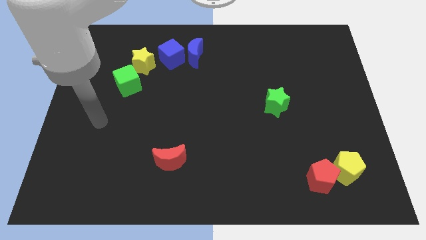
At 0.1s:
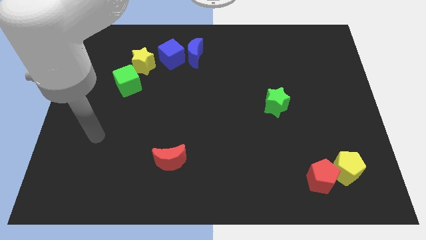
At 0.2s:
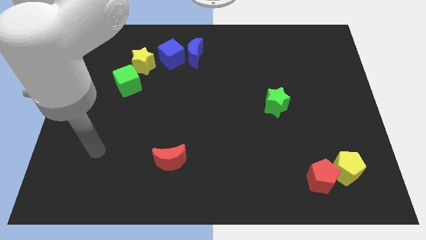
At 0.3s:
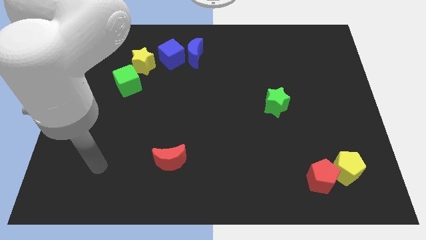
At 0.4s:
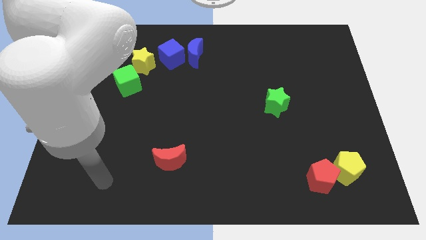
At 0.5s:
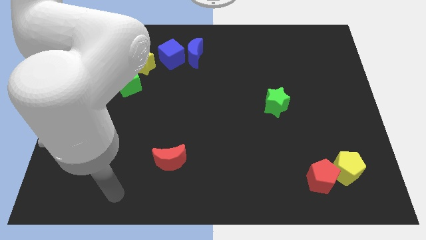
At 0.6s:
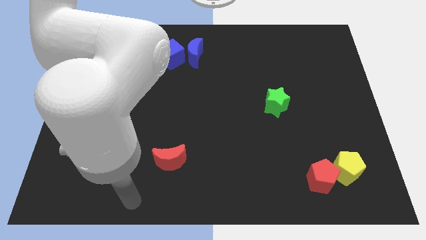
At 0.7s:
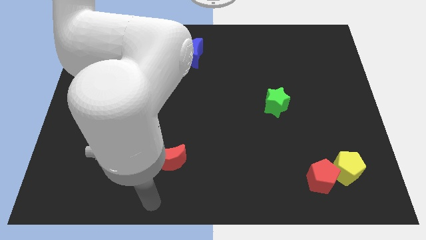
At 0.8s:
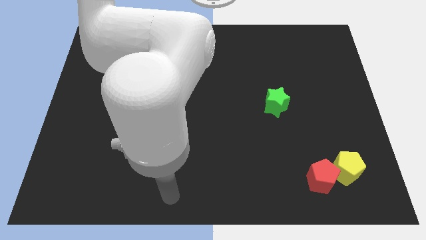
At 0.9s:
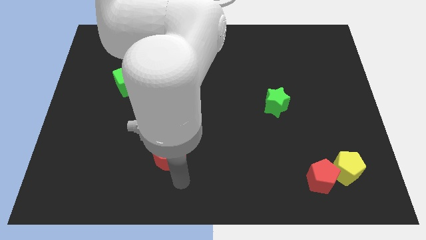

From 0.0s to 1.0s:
move your arm to the bottom side of the red crescent

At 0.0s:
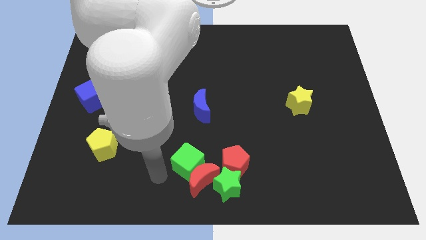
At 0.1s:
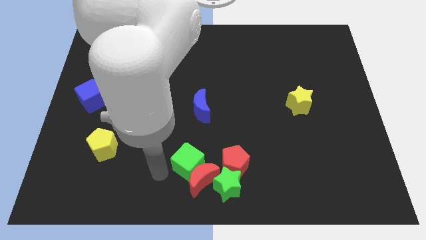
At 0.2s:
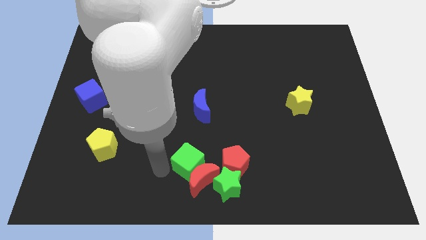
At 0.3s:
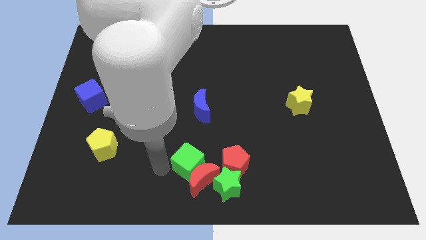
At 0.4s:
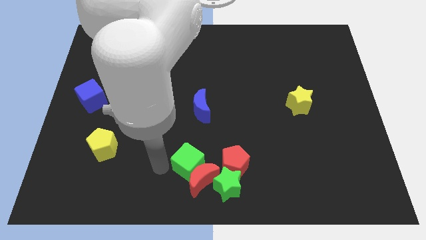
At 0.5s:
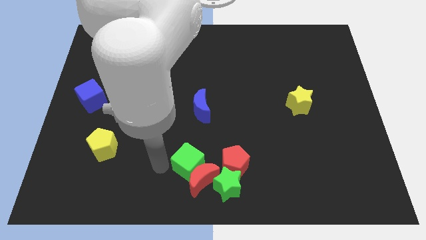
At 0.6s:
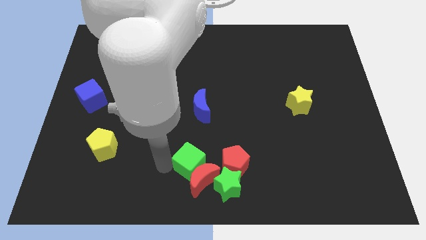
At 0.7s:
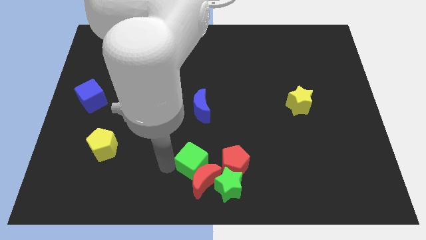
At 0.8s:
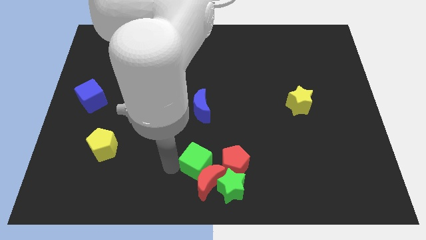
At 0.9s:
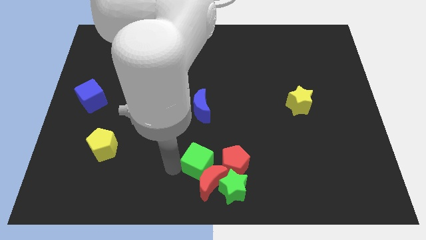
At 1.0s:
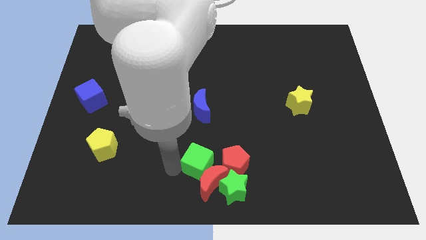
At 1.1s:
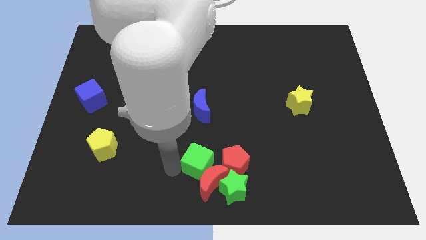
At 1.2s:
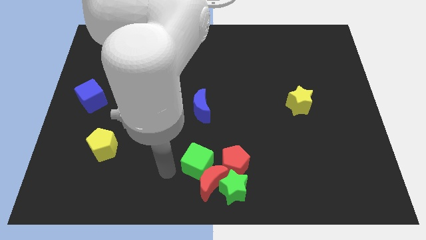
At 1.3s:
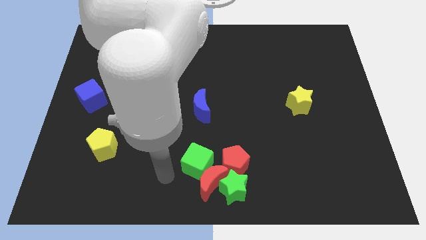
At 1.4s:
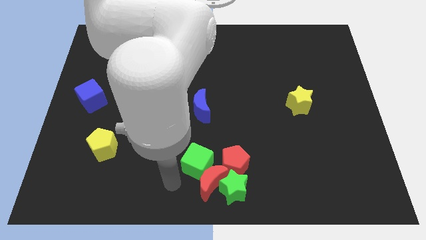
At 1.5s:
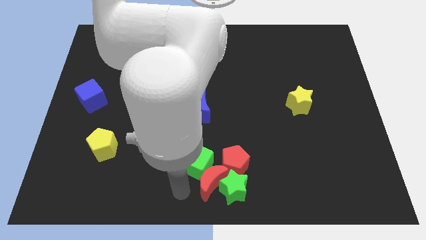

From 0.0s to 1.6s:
move both the green cube and red moon slightly into the green star

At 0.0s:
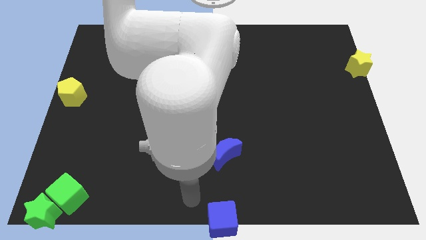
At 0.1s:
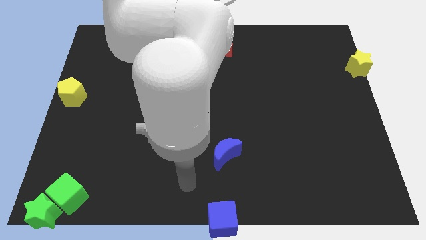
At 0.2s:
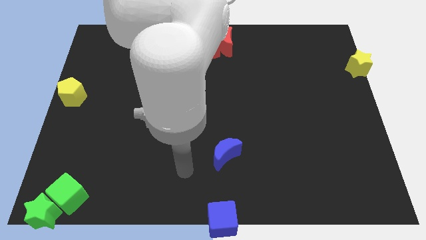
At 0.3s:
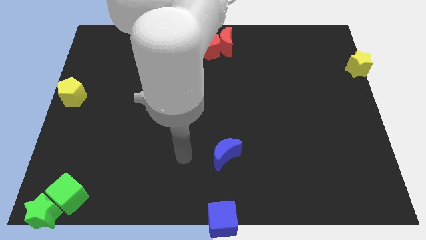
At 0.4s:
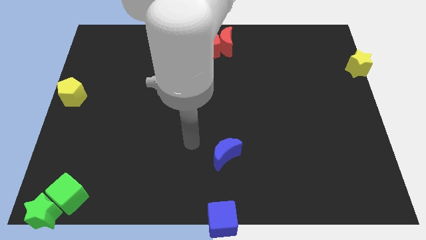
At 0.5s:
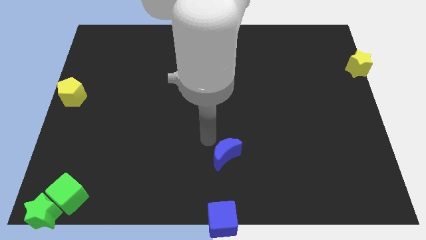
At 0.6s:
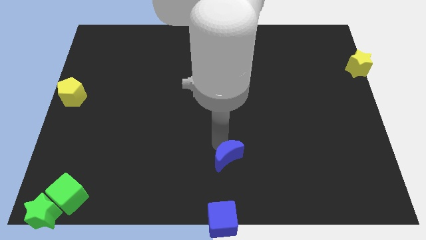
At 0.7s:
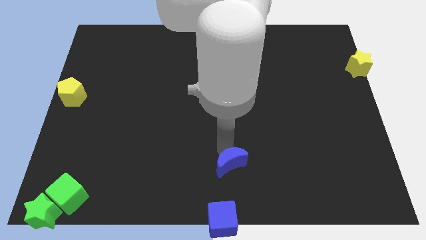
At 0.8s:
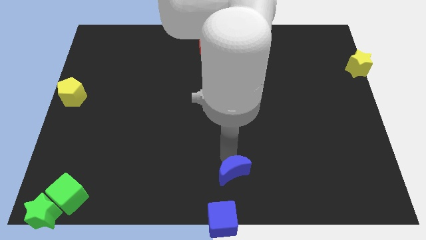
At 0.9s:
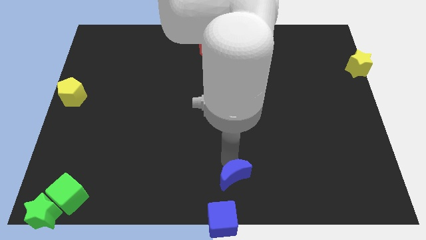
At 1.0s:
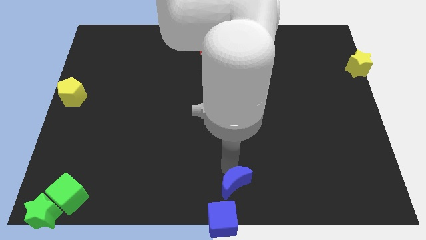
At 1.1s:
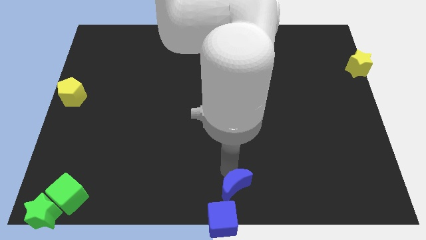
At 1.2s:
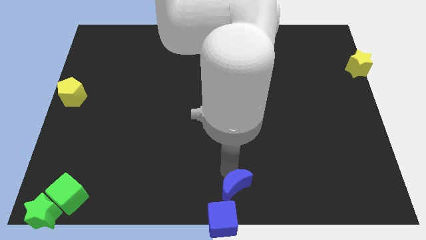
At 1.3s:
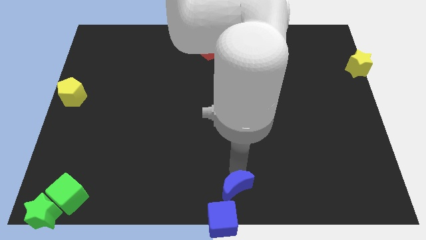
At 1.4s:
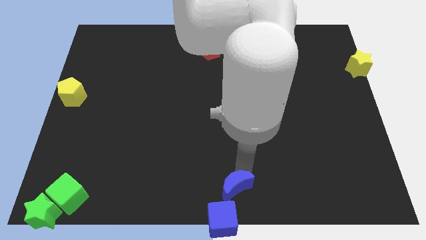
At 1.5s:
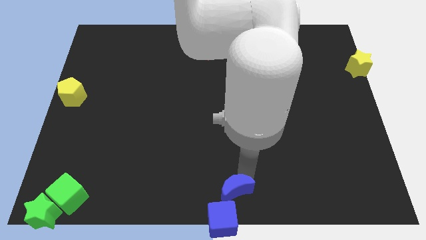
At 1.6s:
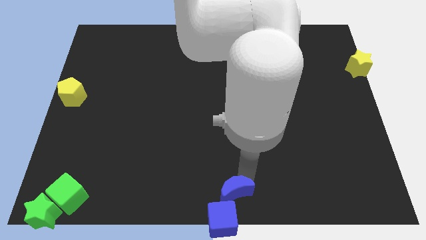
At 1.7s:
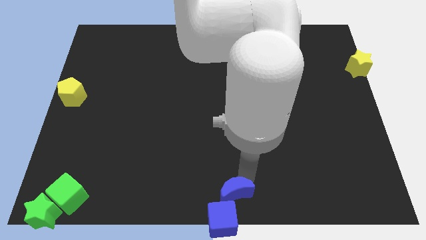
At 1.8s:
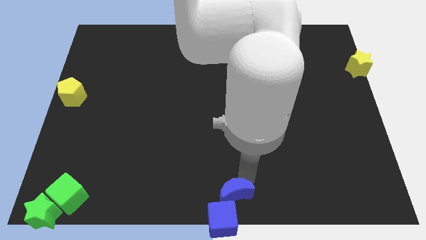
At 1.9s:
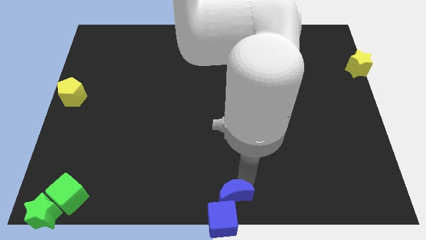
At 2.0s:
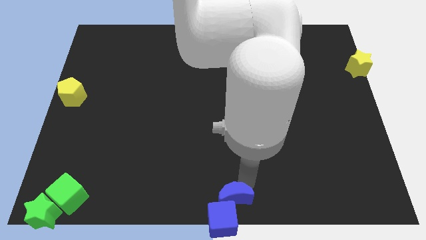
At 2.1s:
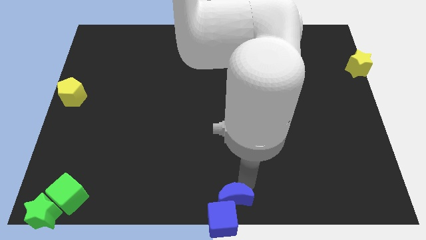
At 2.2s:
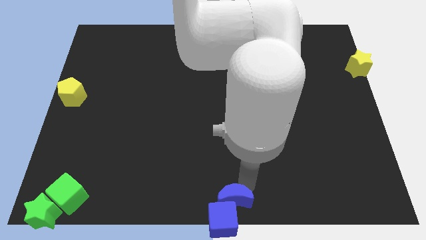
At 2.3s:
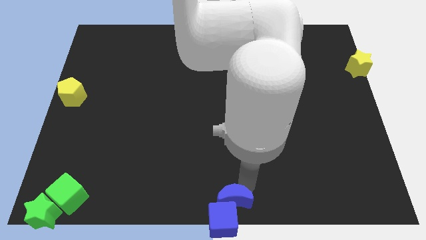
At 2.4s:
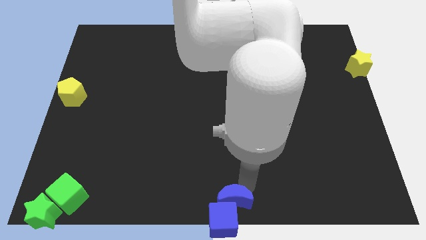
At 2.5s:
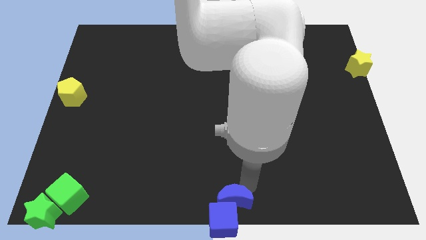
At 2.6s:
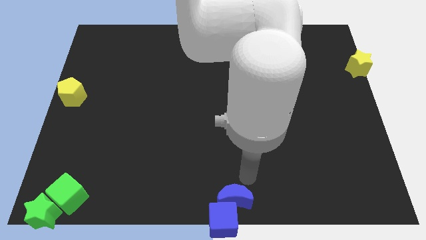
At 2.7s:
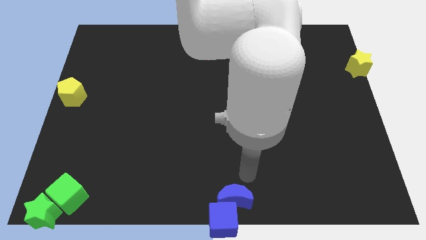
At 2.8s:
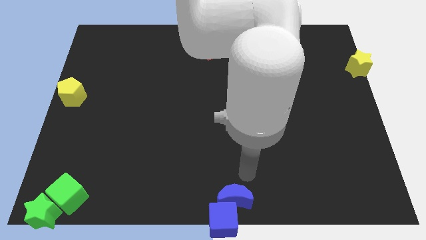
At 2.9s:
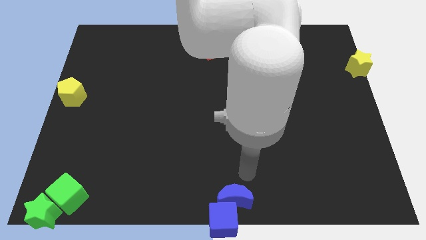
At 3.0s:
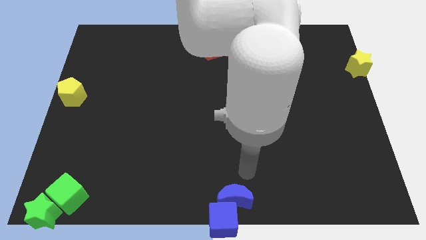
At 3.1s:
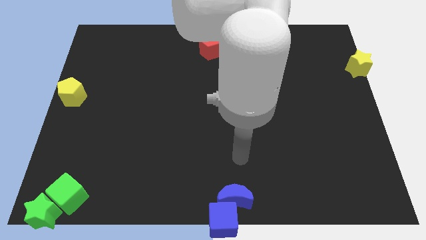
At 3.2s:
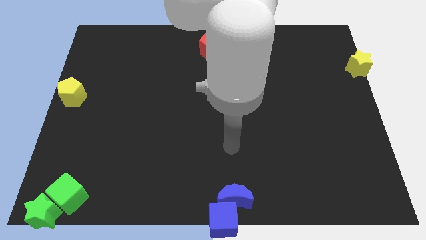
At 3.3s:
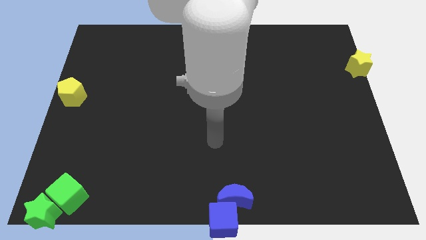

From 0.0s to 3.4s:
push blue crescent into the blue cube

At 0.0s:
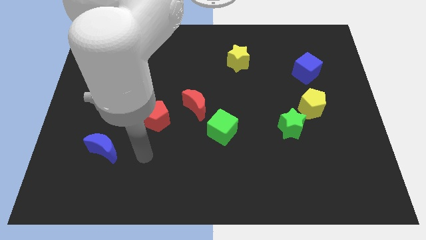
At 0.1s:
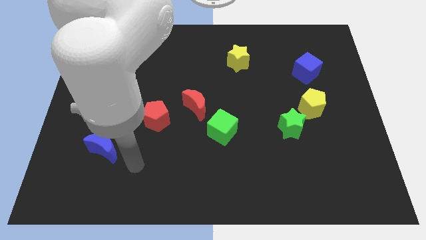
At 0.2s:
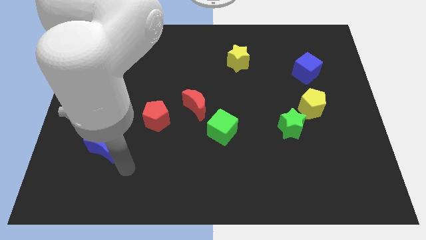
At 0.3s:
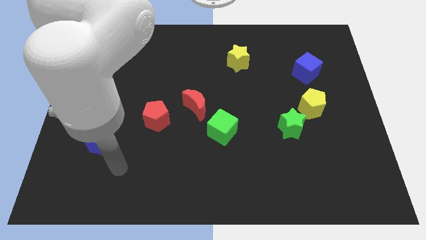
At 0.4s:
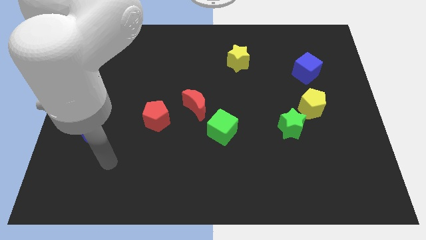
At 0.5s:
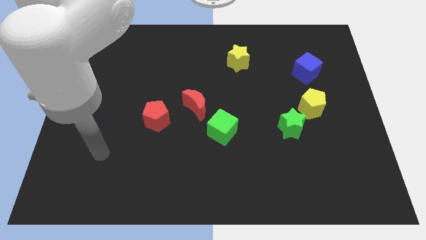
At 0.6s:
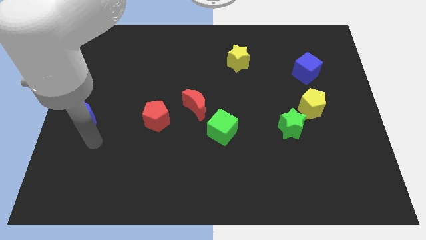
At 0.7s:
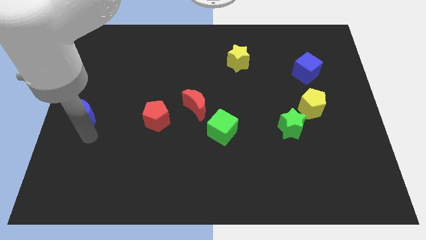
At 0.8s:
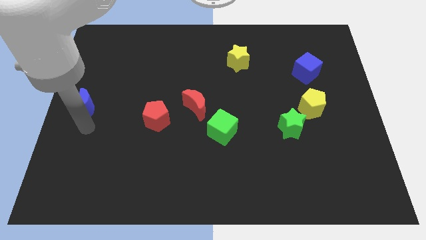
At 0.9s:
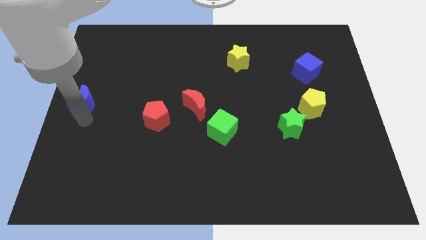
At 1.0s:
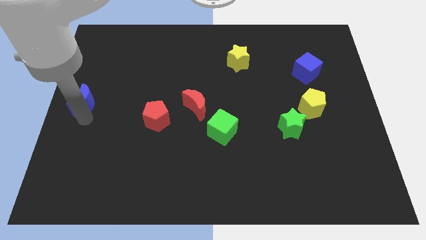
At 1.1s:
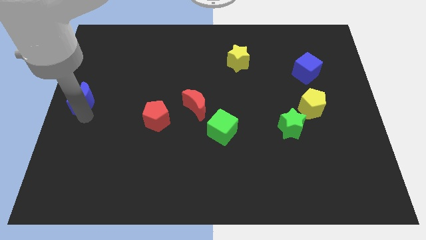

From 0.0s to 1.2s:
place the blue moon to the center left side of the board

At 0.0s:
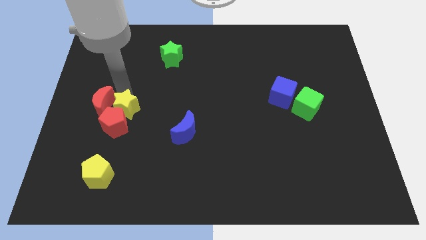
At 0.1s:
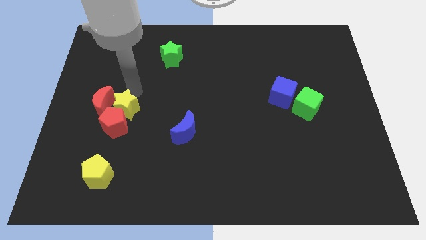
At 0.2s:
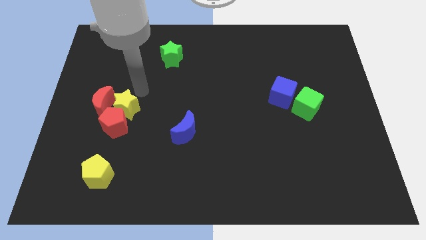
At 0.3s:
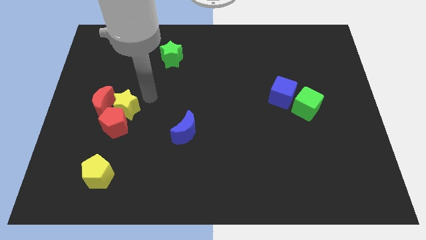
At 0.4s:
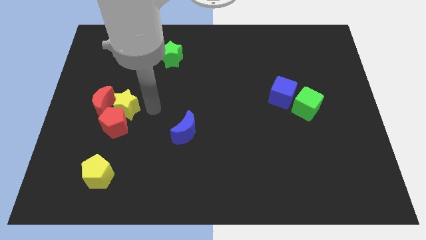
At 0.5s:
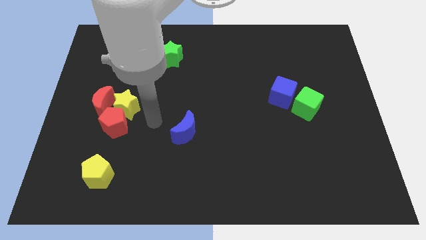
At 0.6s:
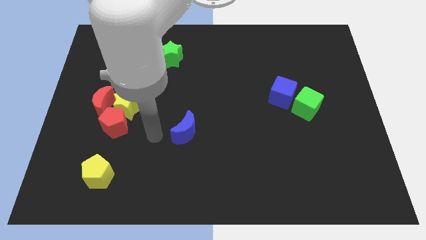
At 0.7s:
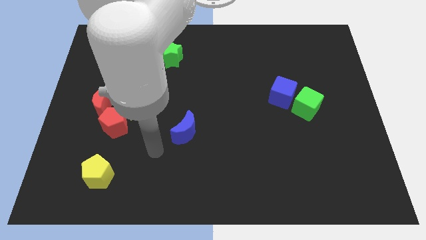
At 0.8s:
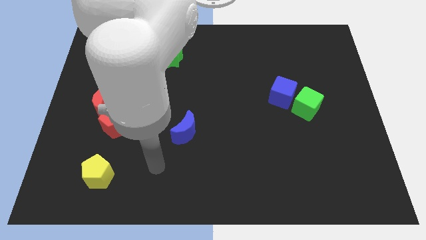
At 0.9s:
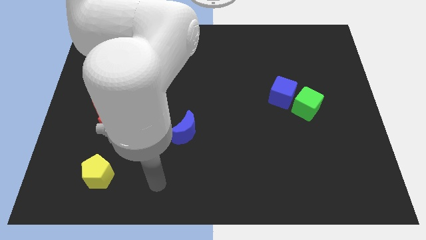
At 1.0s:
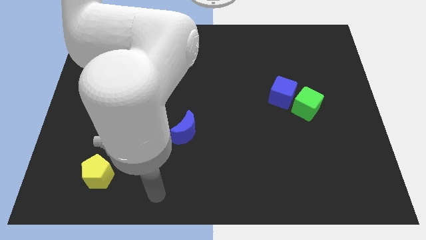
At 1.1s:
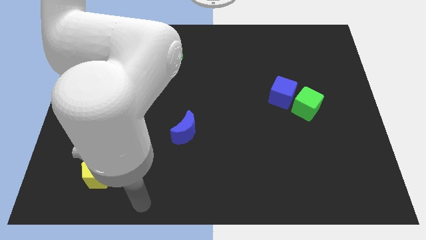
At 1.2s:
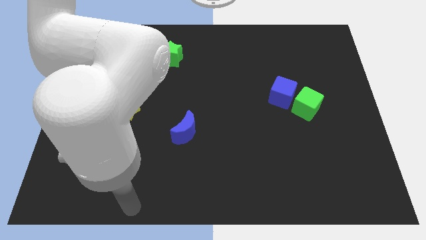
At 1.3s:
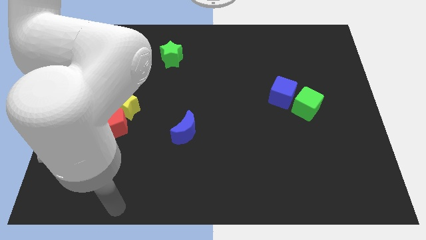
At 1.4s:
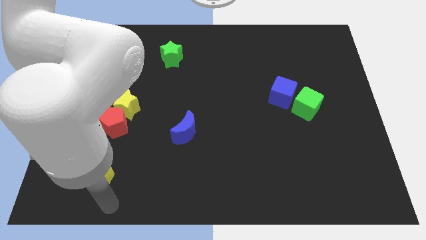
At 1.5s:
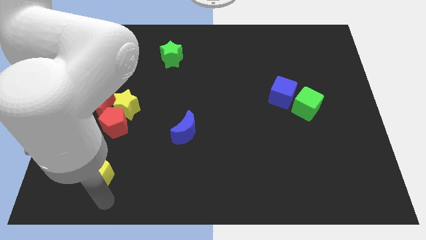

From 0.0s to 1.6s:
point your arm below yellow pentagon

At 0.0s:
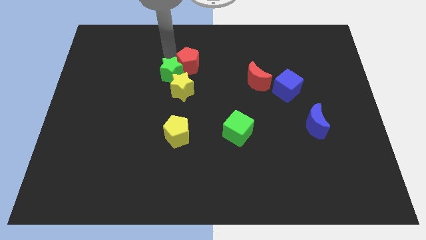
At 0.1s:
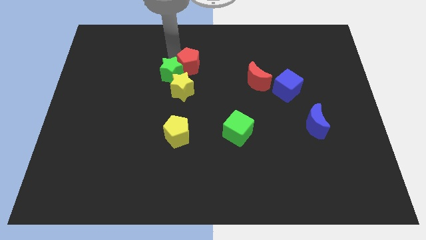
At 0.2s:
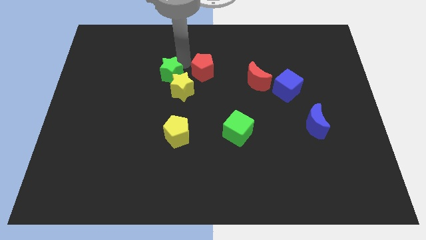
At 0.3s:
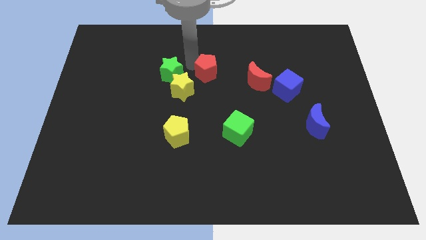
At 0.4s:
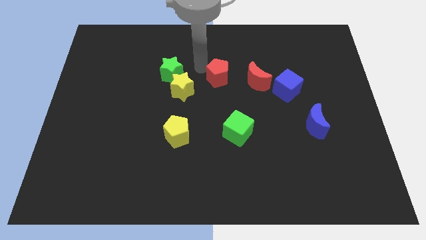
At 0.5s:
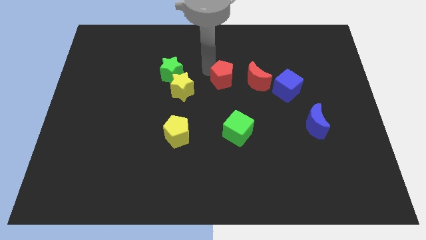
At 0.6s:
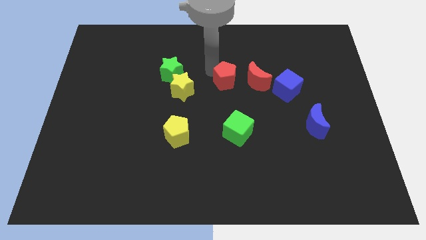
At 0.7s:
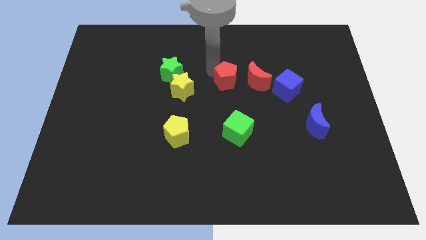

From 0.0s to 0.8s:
place the red pentagon horizontally to the left side of the red crescent
